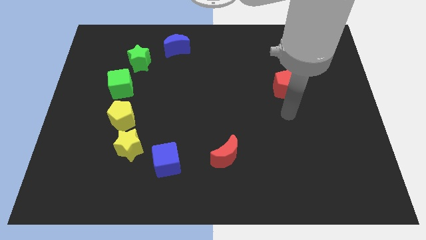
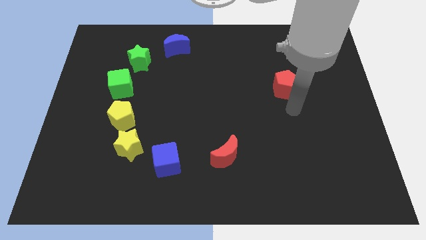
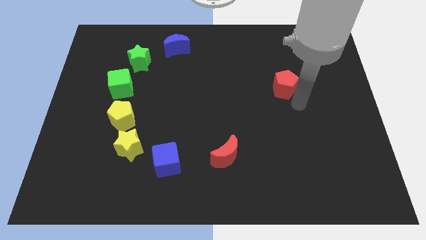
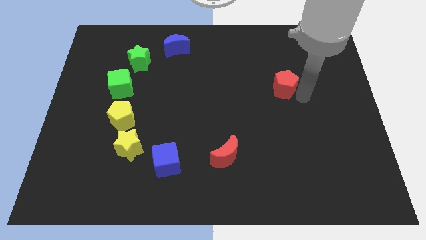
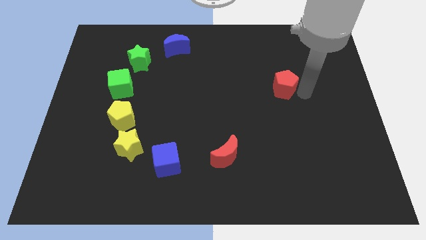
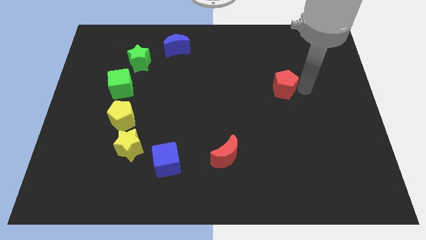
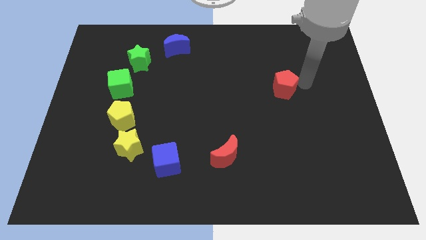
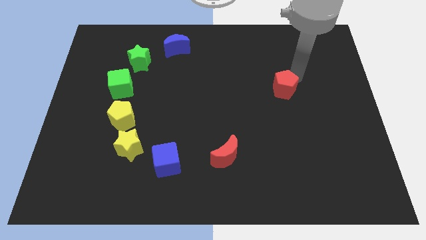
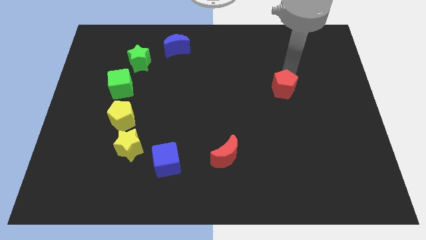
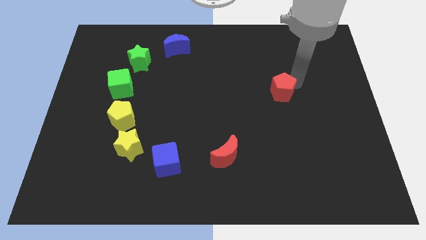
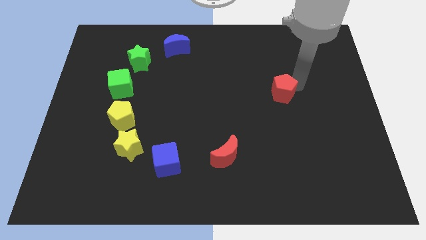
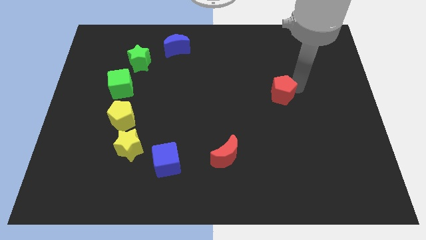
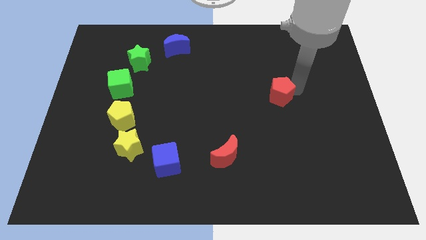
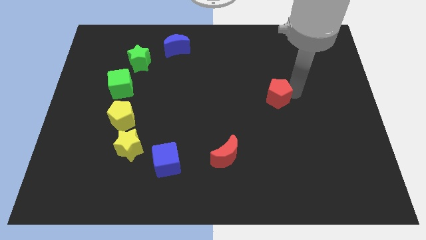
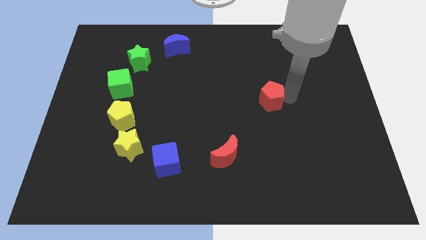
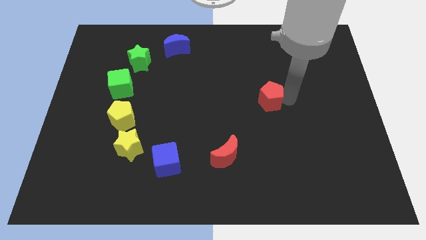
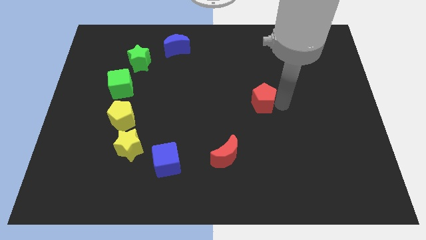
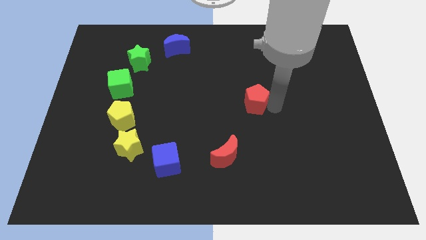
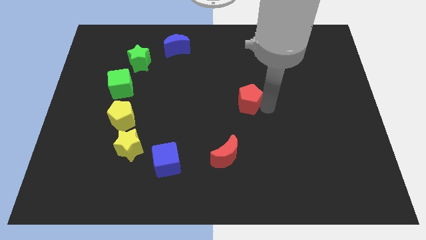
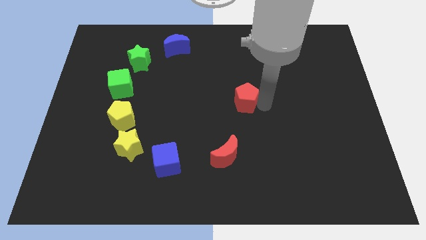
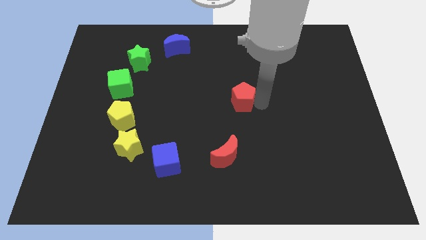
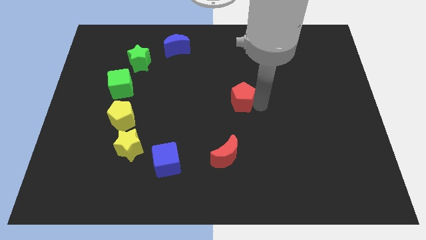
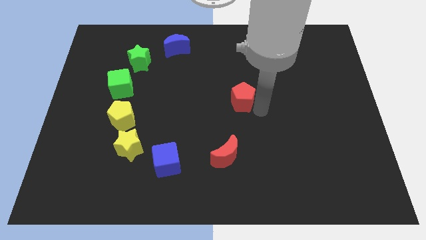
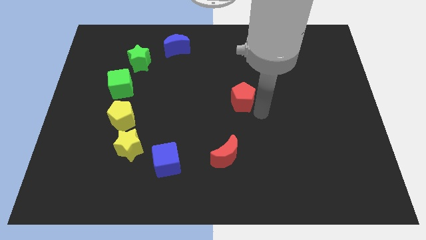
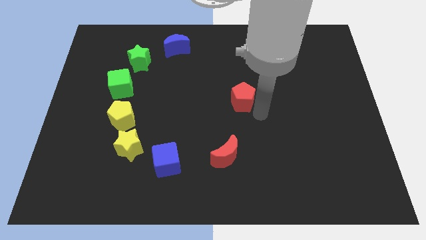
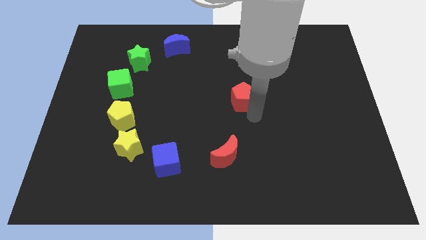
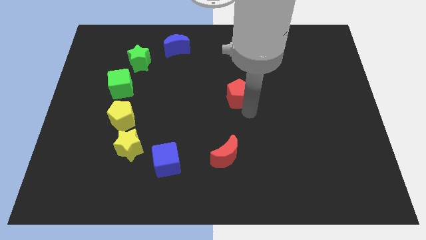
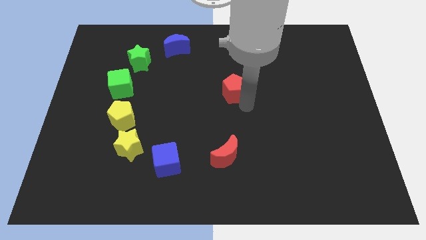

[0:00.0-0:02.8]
drag red pentagon towards left side of the board

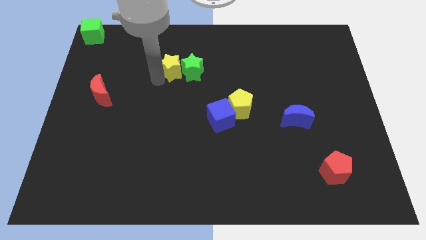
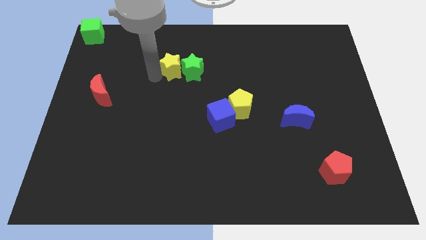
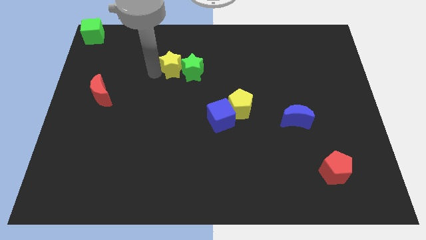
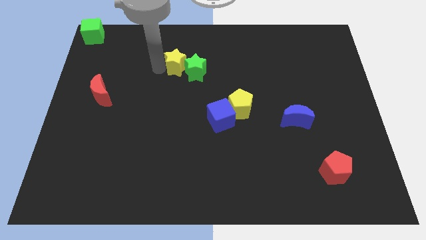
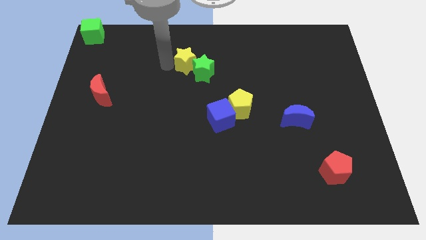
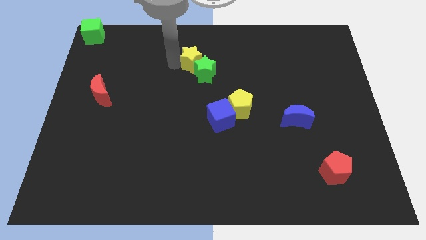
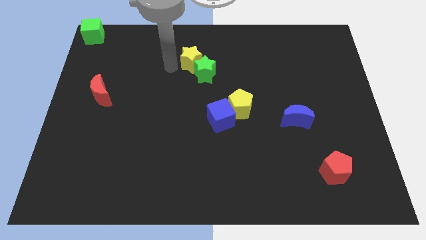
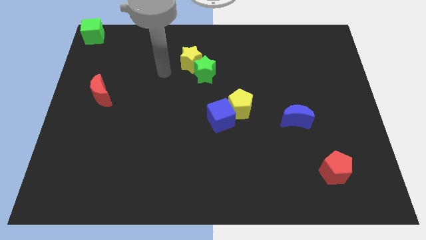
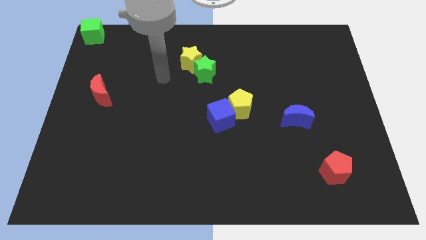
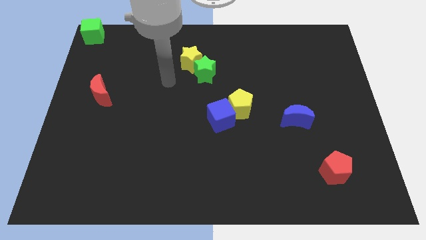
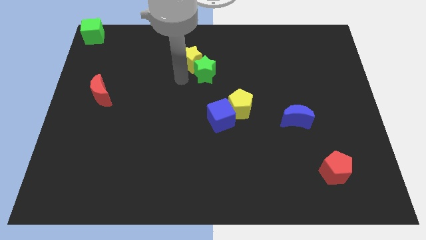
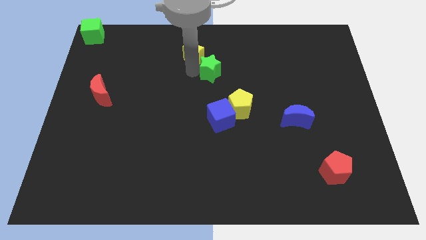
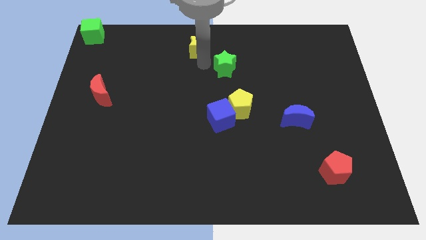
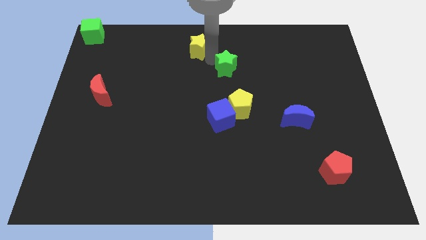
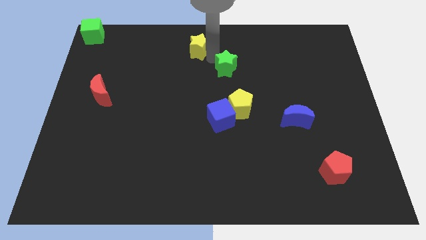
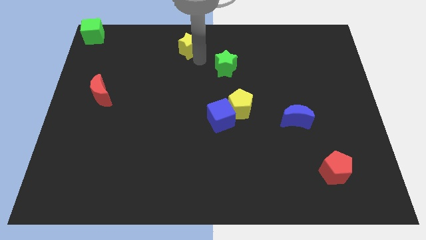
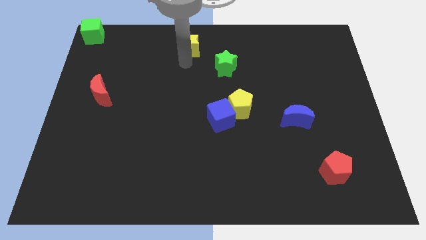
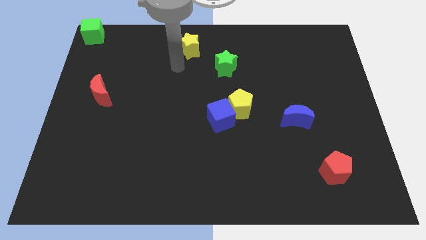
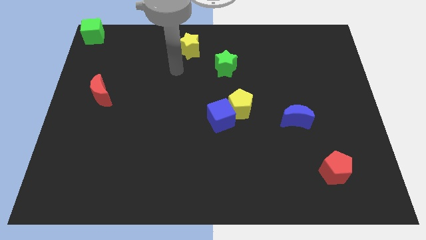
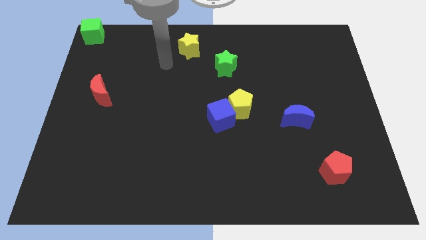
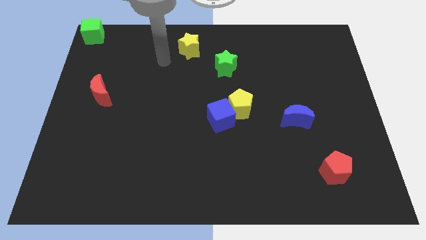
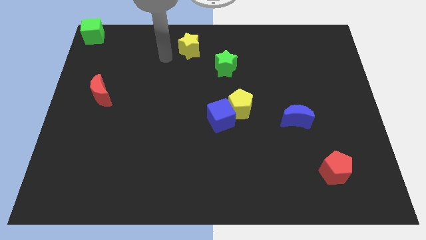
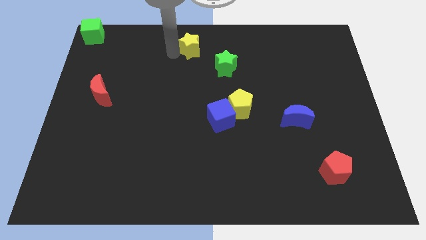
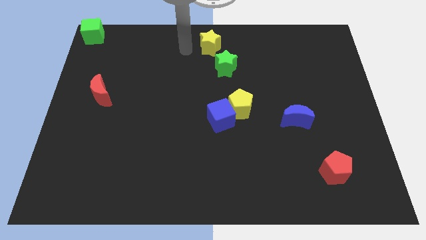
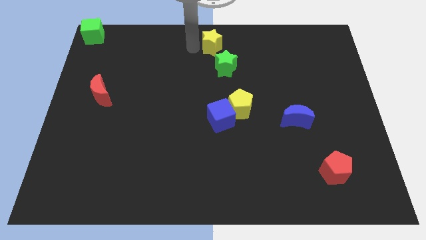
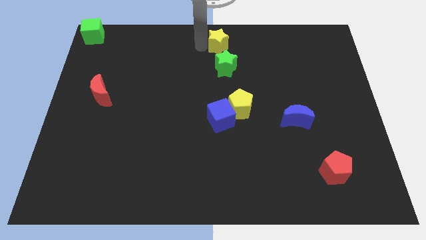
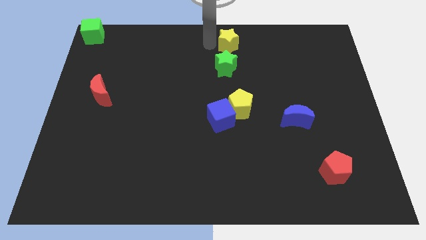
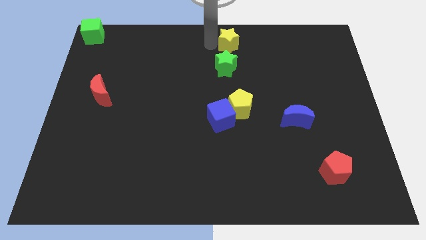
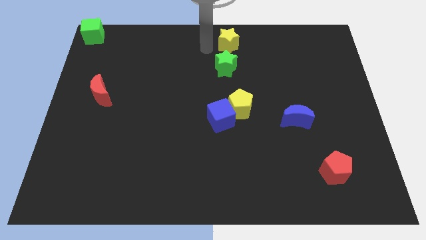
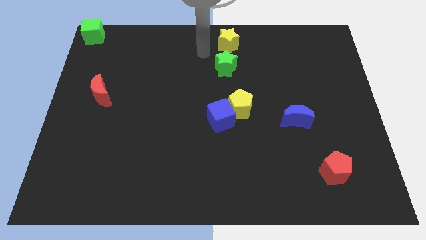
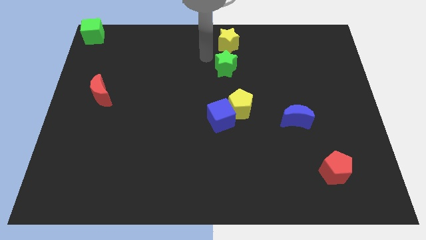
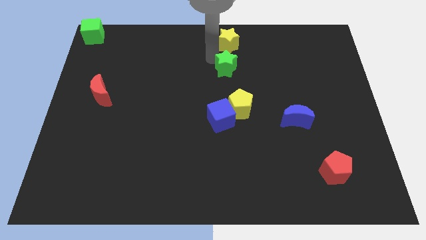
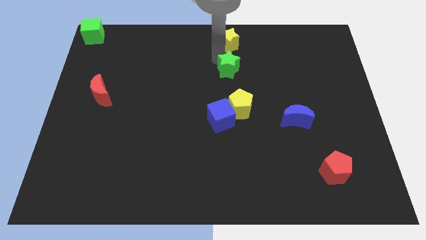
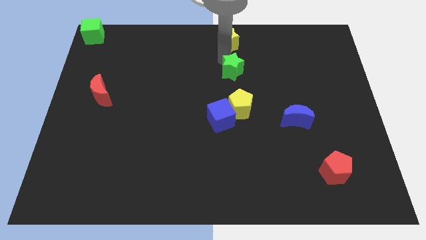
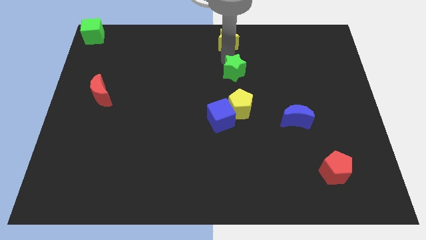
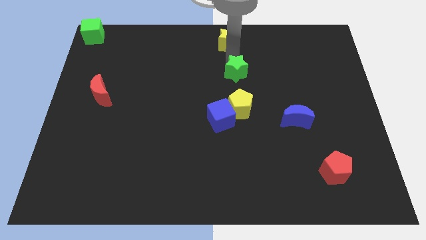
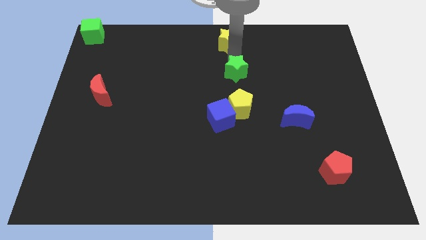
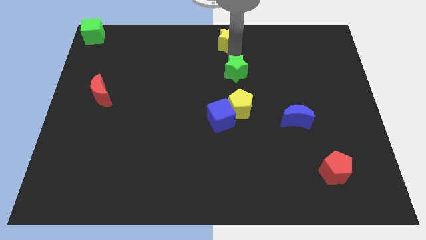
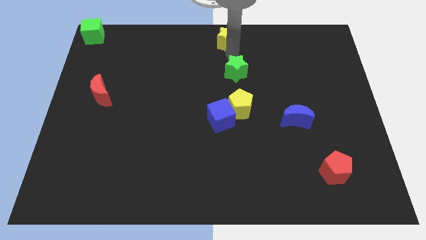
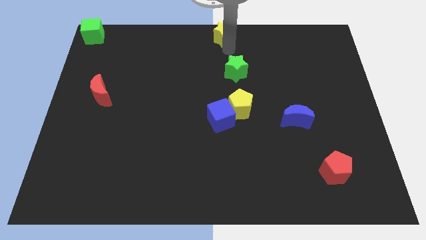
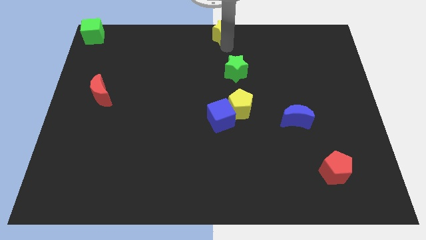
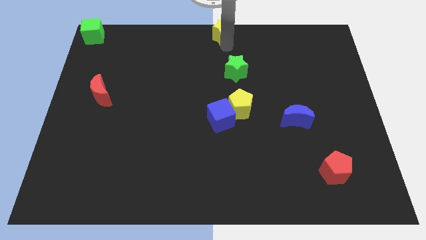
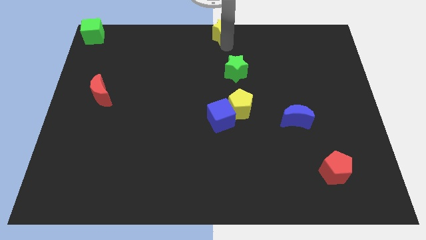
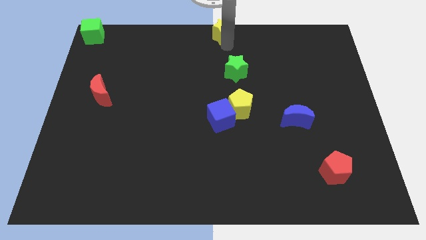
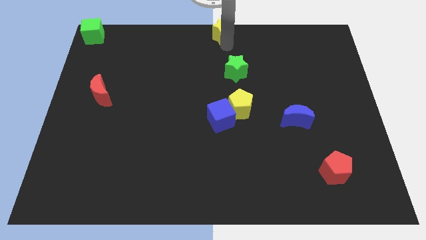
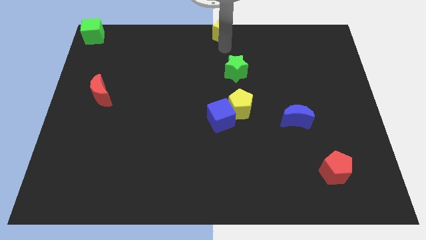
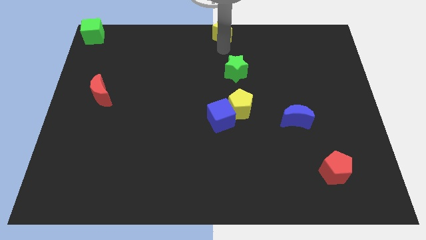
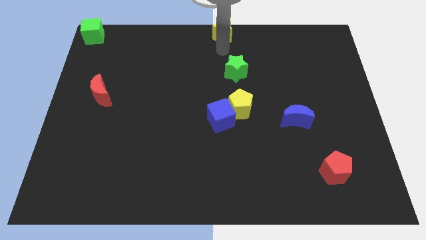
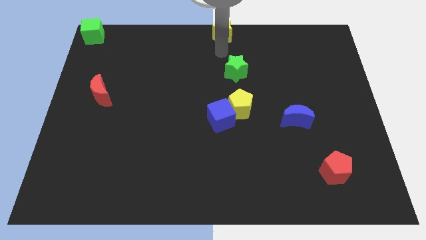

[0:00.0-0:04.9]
push the yellow star at the top center of the board

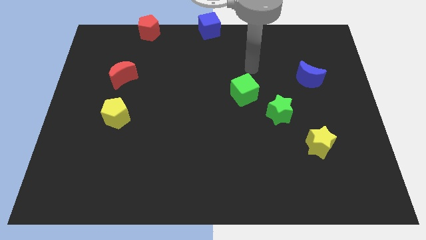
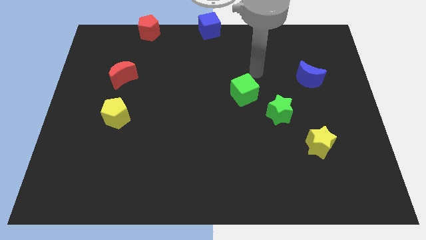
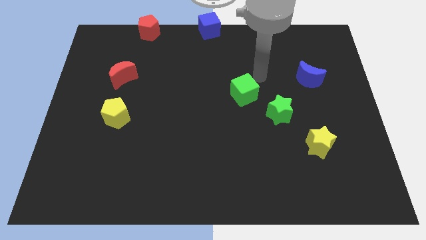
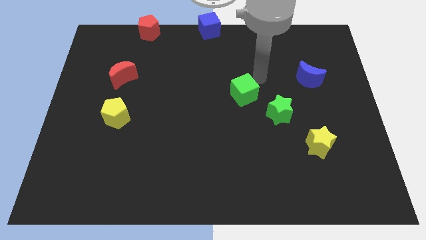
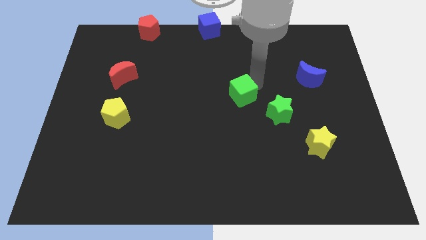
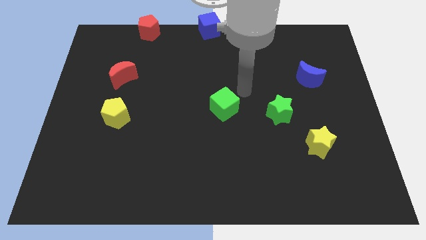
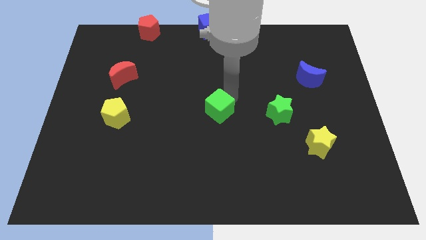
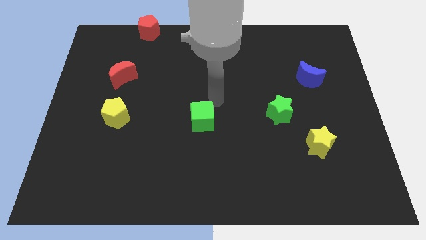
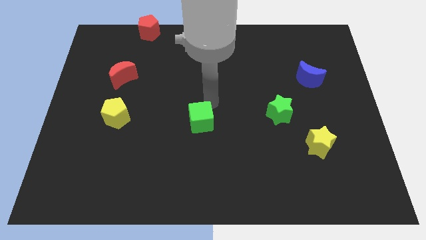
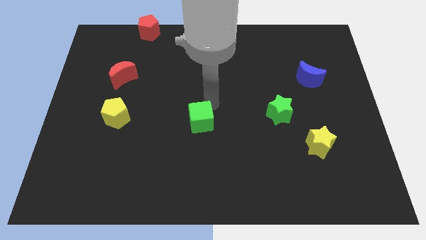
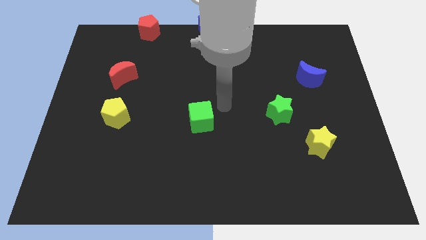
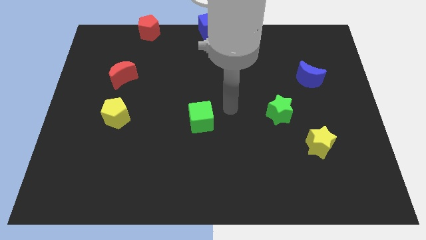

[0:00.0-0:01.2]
move green cube to the middle of the board
